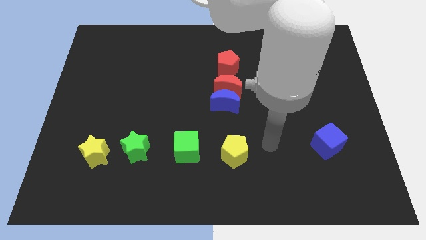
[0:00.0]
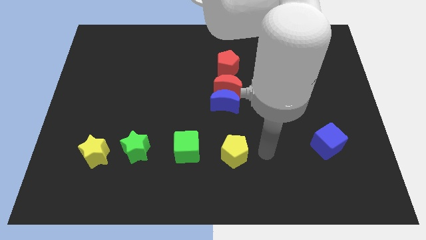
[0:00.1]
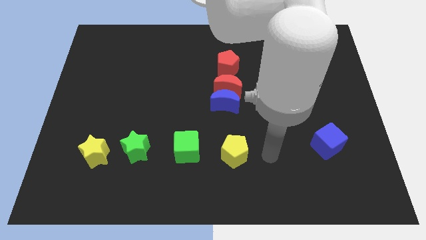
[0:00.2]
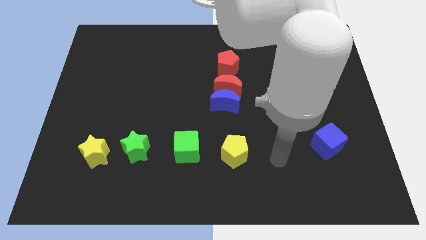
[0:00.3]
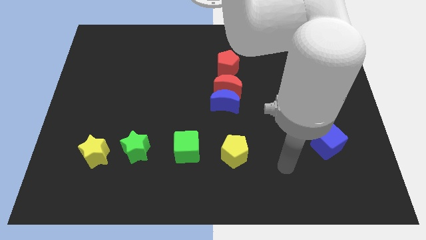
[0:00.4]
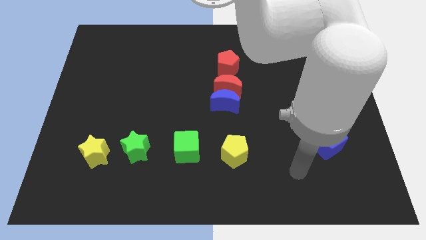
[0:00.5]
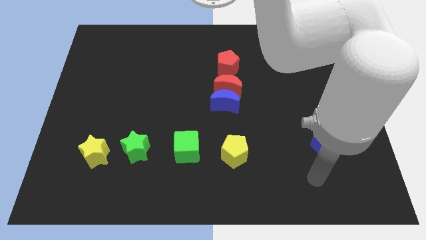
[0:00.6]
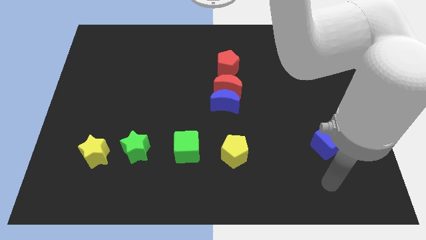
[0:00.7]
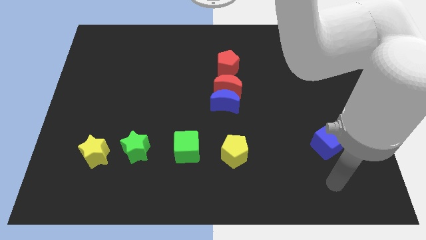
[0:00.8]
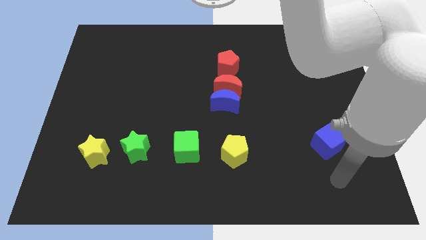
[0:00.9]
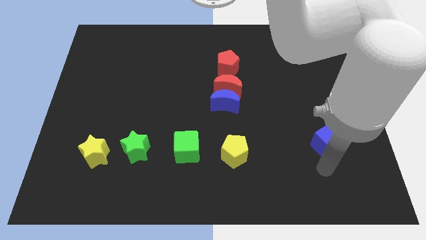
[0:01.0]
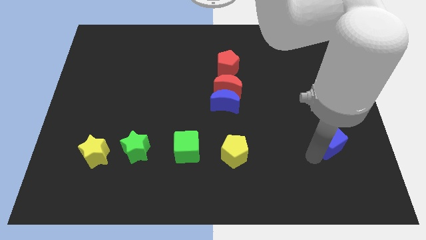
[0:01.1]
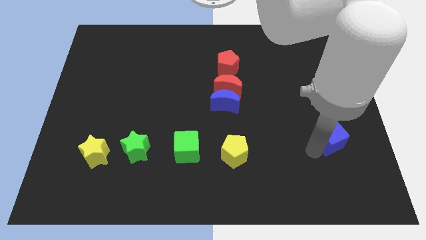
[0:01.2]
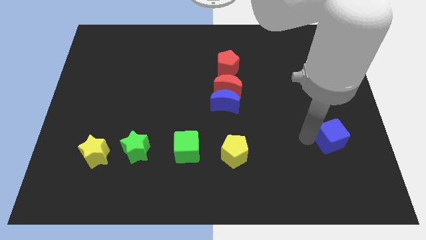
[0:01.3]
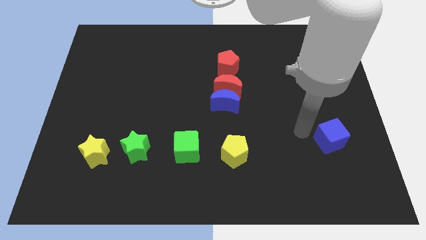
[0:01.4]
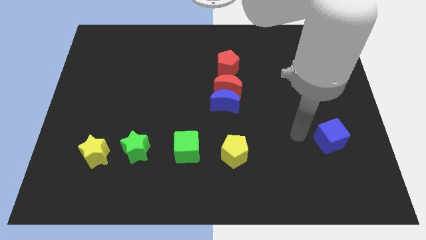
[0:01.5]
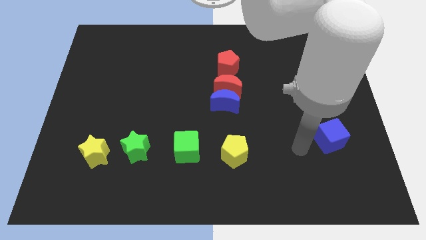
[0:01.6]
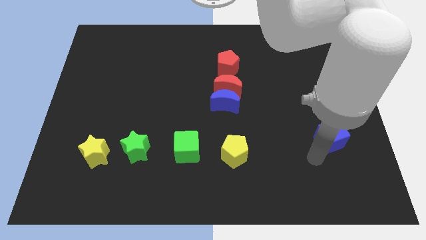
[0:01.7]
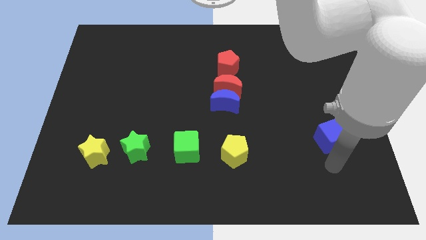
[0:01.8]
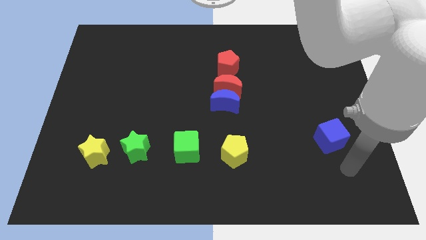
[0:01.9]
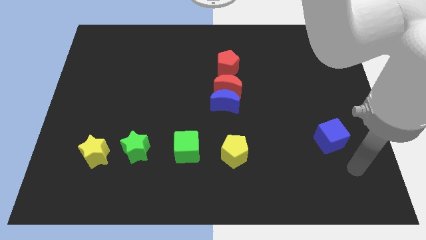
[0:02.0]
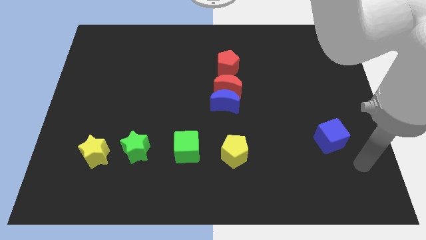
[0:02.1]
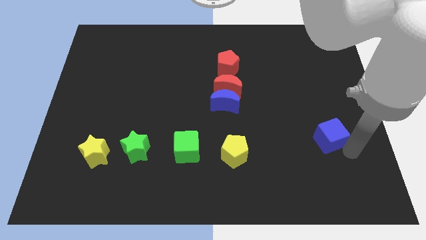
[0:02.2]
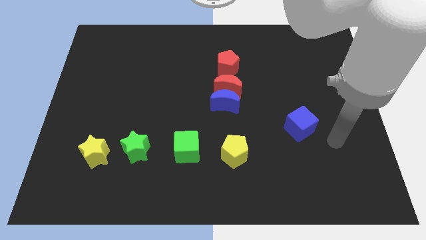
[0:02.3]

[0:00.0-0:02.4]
slightly push the blue cube to the right center of the board

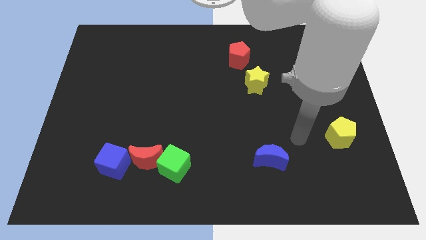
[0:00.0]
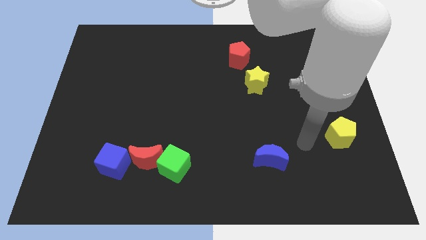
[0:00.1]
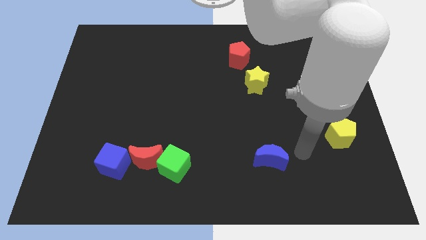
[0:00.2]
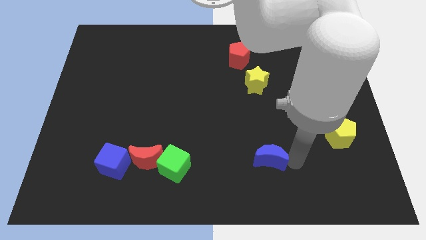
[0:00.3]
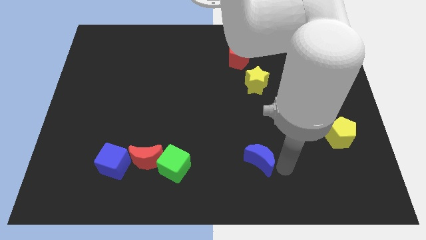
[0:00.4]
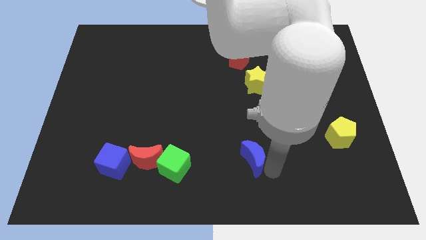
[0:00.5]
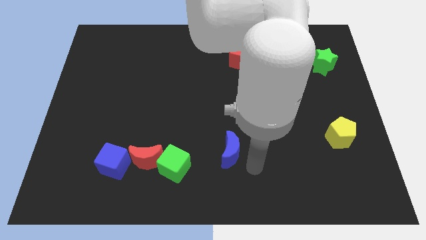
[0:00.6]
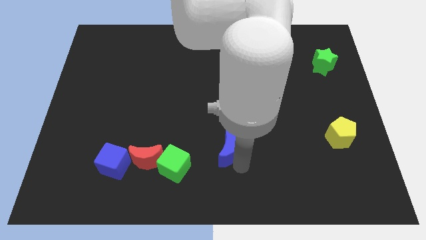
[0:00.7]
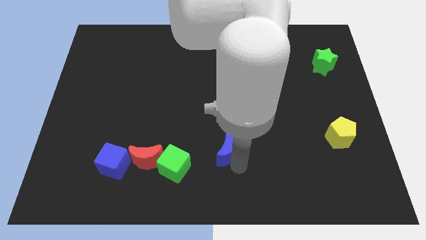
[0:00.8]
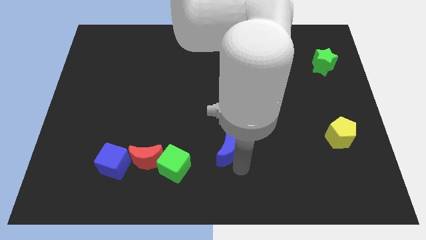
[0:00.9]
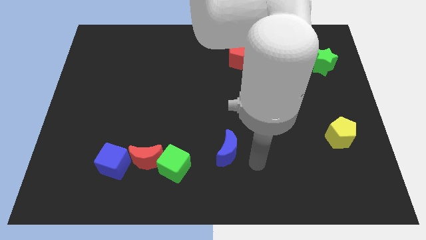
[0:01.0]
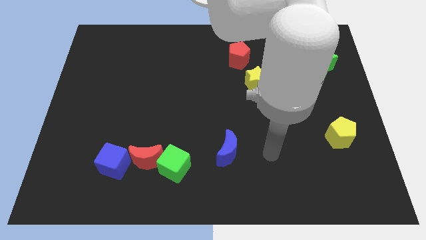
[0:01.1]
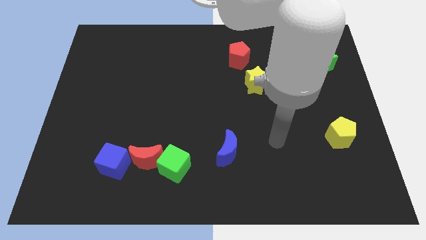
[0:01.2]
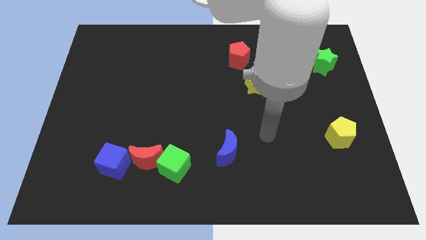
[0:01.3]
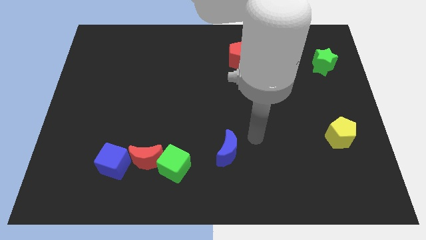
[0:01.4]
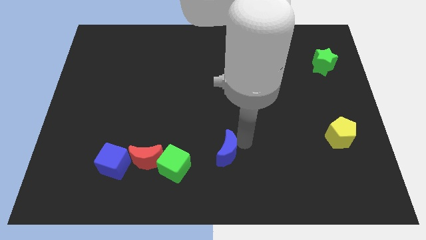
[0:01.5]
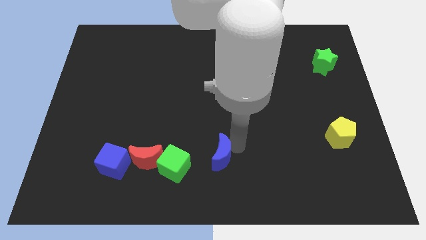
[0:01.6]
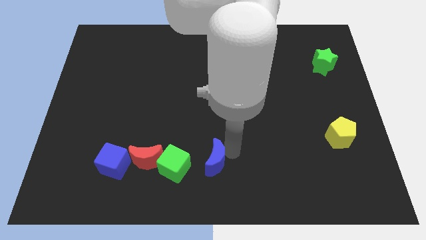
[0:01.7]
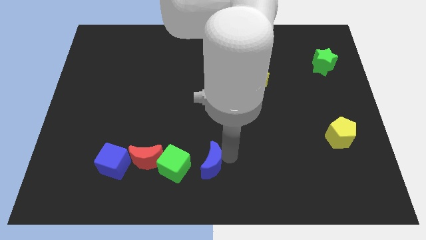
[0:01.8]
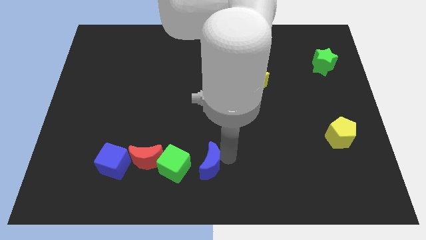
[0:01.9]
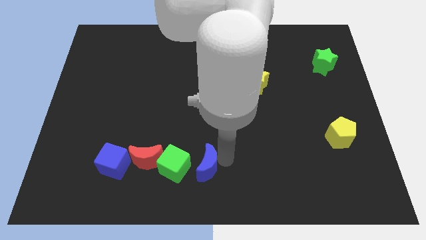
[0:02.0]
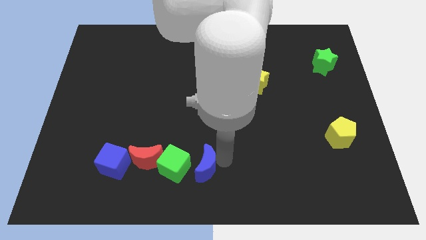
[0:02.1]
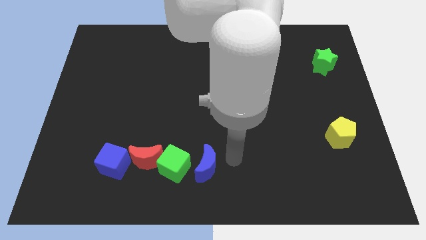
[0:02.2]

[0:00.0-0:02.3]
push the blue moon diagonally left to the yellow star

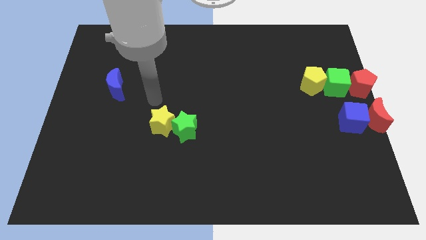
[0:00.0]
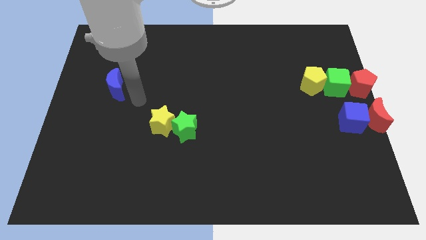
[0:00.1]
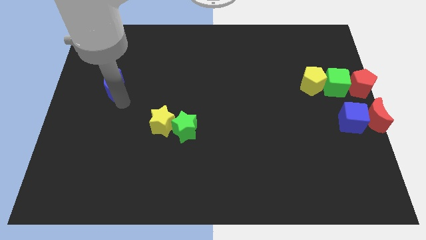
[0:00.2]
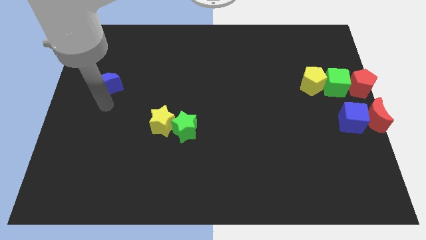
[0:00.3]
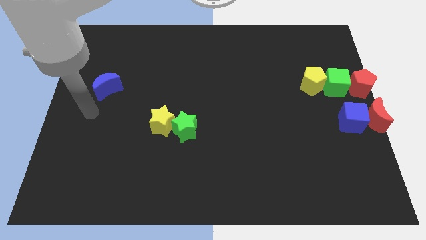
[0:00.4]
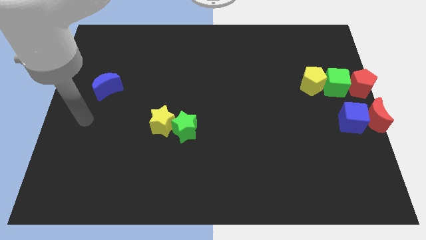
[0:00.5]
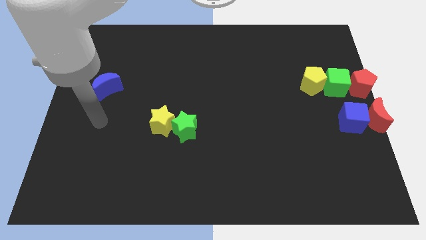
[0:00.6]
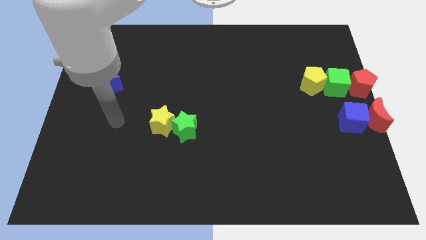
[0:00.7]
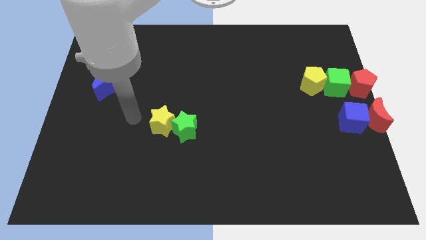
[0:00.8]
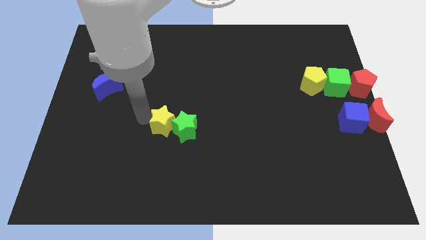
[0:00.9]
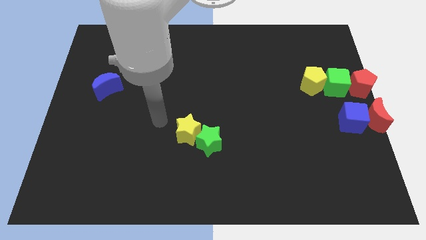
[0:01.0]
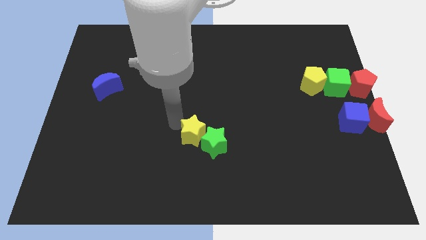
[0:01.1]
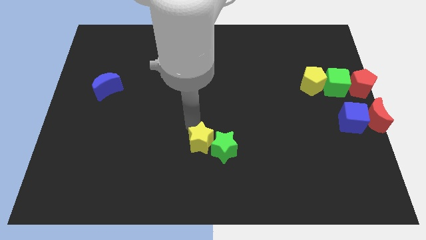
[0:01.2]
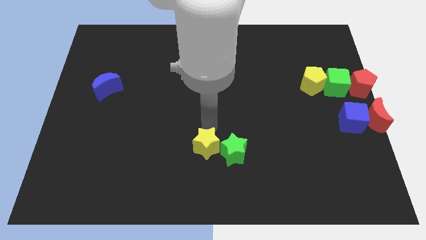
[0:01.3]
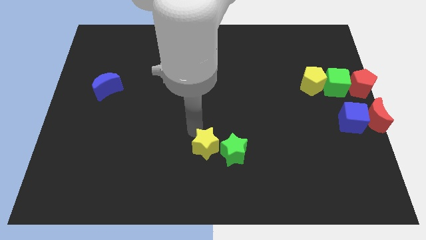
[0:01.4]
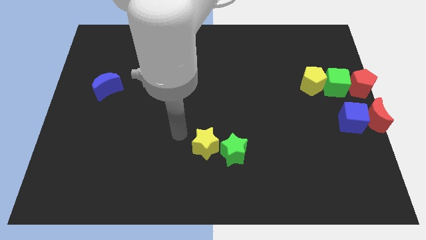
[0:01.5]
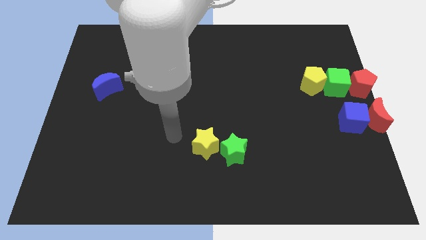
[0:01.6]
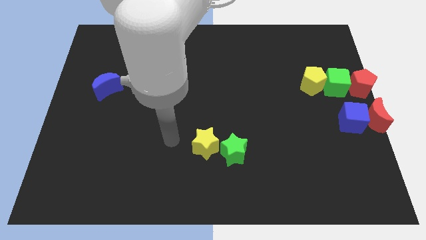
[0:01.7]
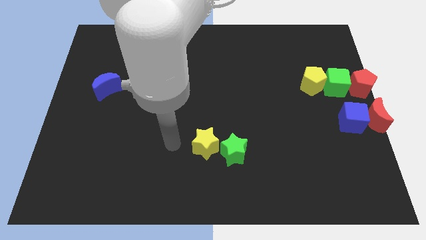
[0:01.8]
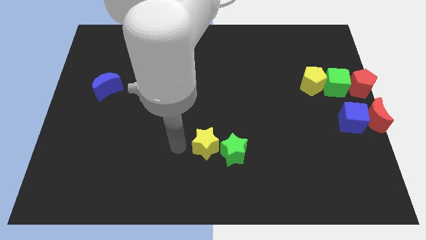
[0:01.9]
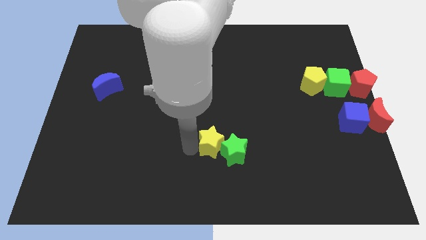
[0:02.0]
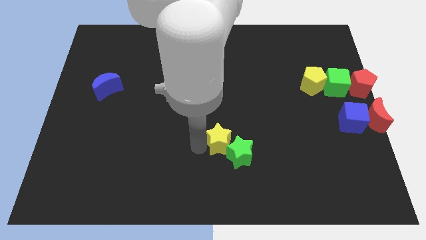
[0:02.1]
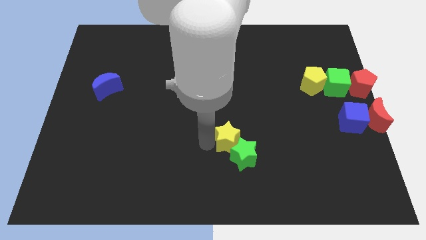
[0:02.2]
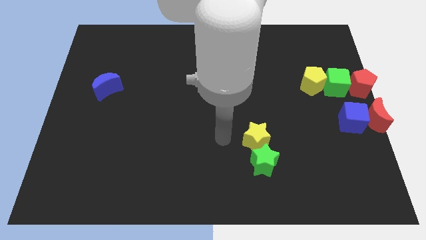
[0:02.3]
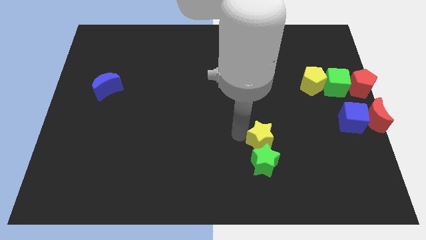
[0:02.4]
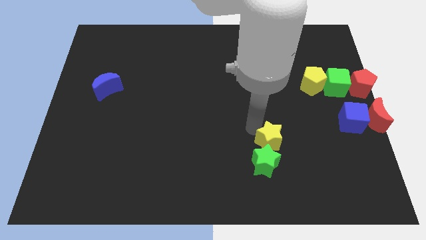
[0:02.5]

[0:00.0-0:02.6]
push the yellow star along with the green star towards down

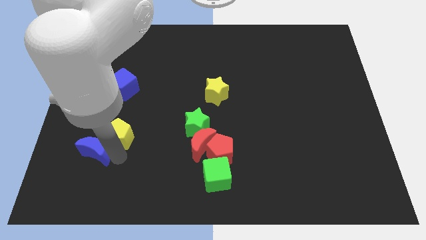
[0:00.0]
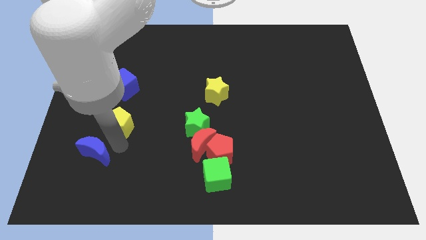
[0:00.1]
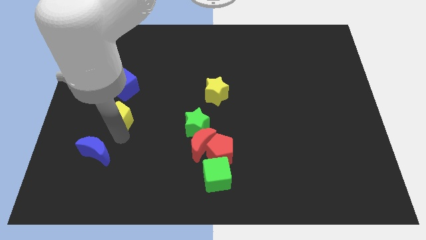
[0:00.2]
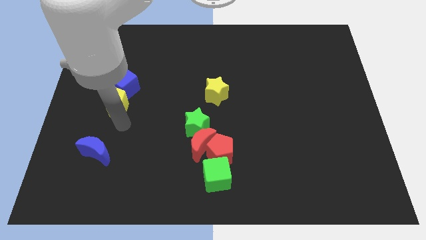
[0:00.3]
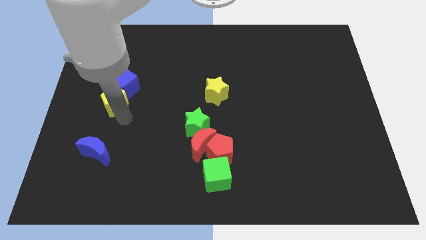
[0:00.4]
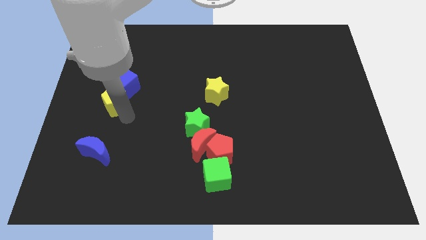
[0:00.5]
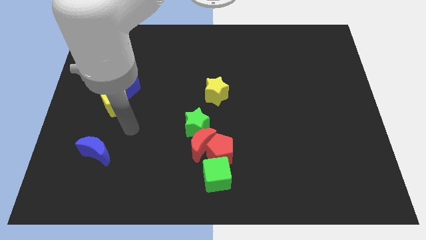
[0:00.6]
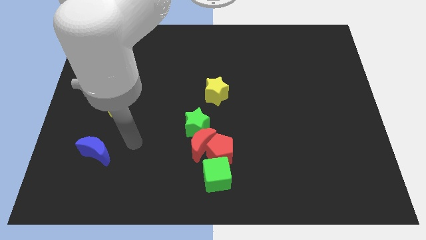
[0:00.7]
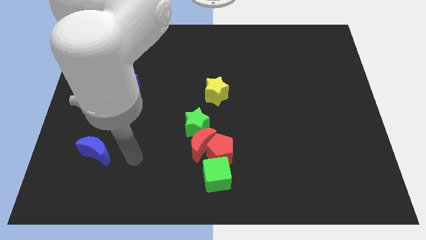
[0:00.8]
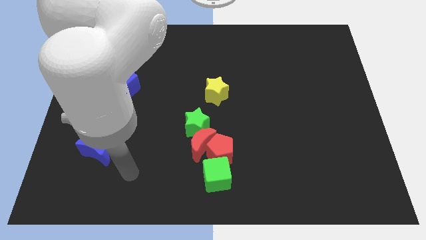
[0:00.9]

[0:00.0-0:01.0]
move yellow pentagon below the blue cube

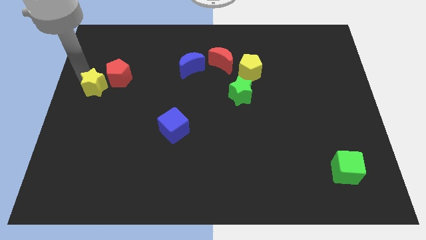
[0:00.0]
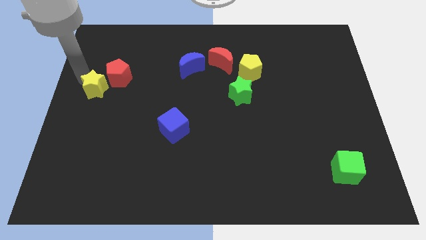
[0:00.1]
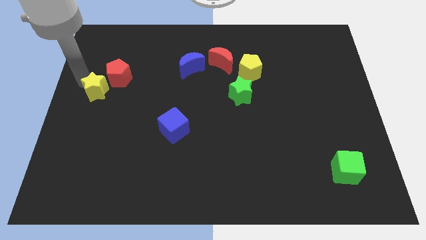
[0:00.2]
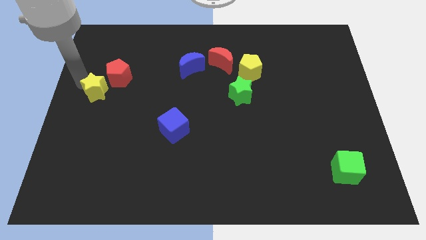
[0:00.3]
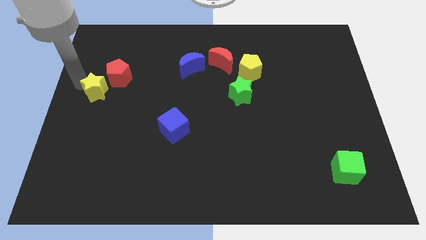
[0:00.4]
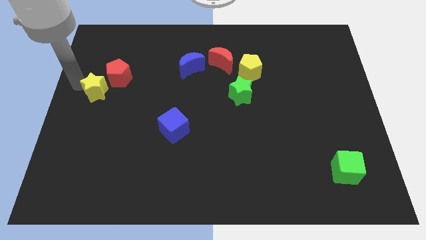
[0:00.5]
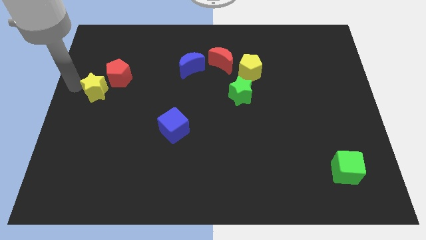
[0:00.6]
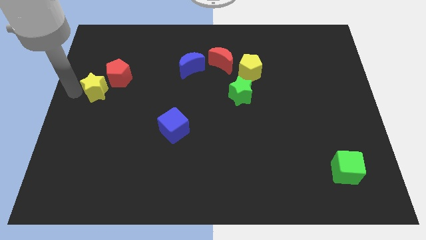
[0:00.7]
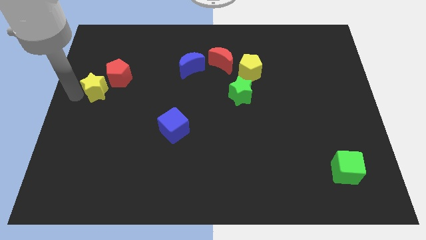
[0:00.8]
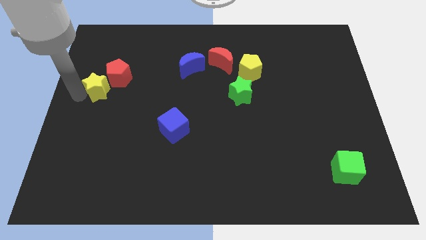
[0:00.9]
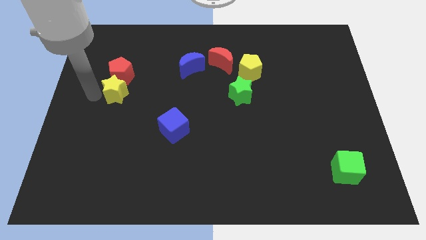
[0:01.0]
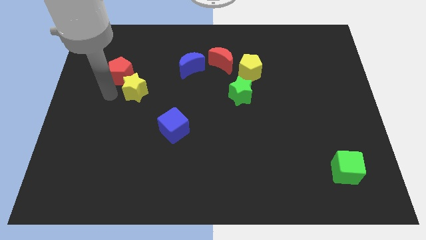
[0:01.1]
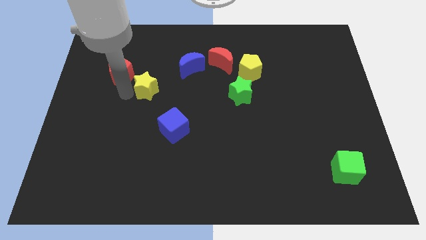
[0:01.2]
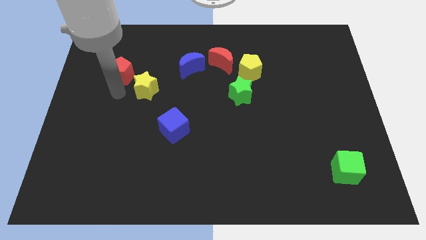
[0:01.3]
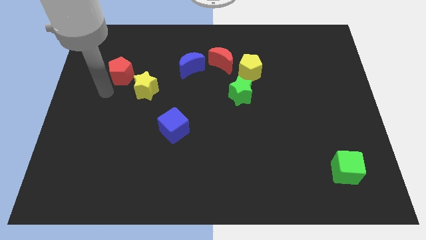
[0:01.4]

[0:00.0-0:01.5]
move the yellow star to the bottom right side of the red pentagon
